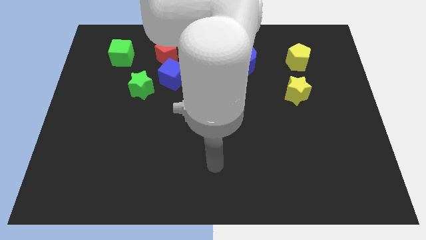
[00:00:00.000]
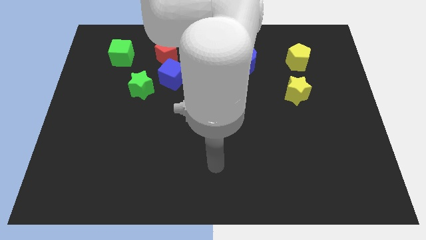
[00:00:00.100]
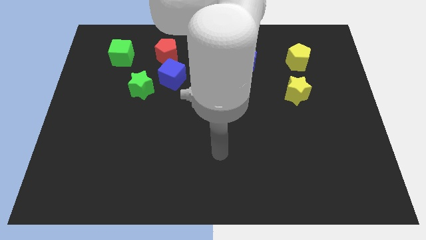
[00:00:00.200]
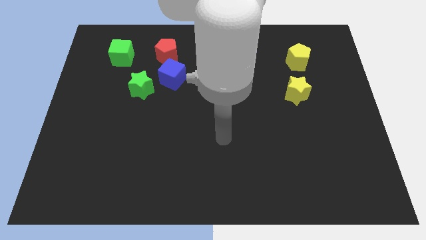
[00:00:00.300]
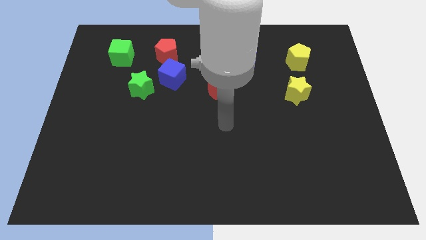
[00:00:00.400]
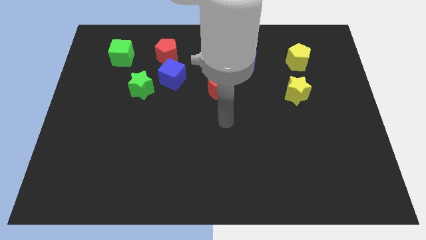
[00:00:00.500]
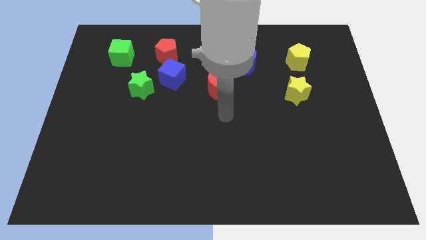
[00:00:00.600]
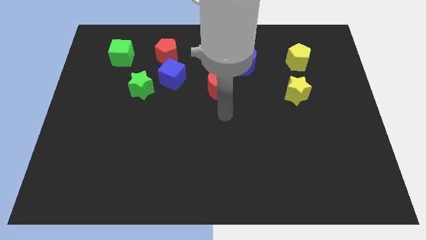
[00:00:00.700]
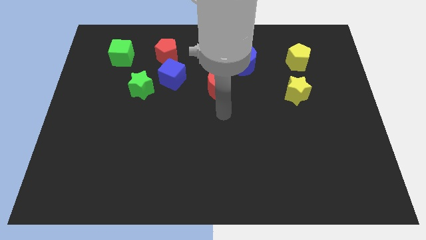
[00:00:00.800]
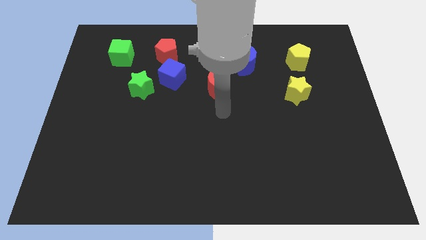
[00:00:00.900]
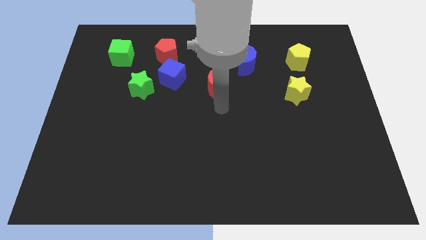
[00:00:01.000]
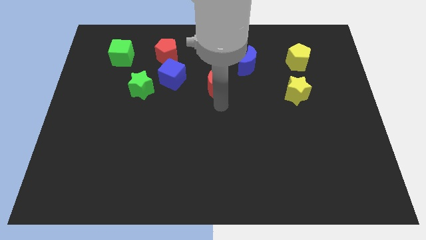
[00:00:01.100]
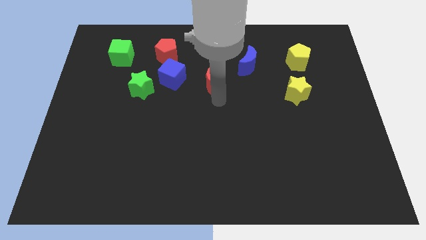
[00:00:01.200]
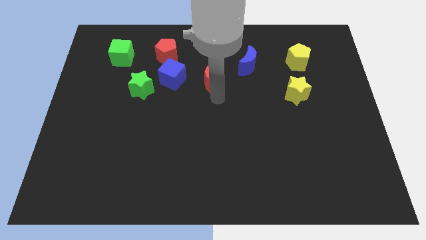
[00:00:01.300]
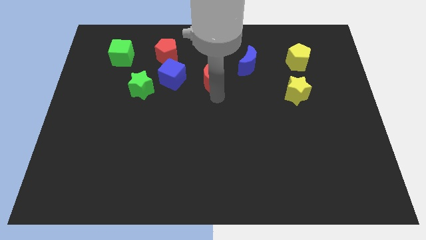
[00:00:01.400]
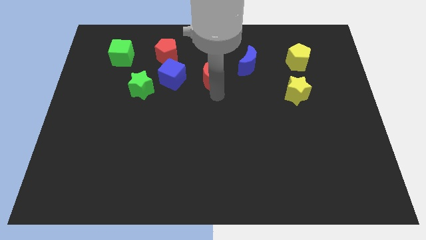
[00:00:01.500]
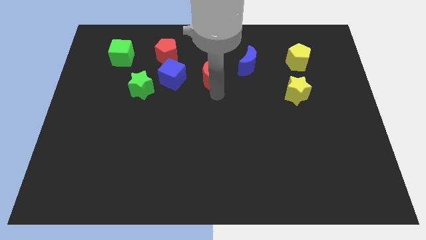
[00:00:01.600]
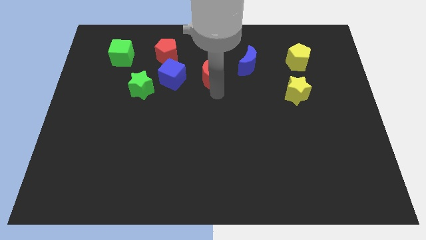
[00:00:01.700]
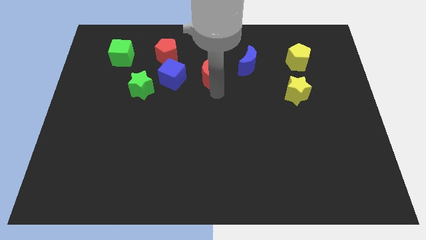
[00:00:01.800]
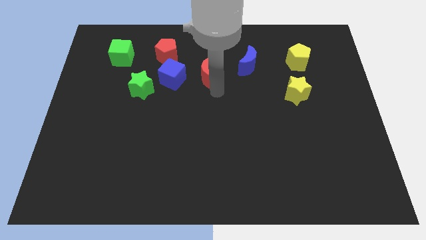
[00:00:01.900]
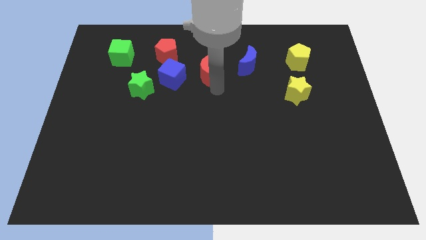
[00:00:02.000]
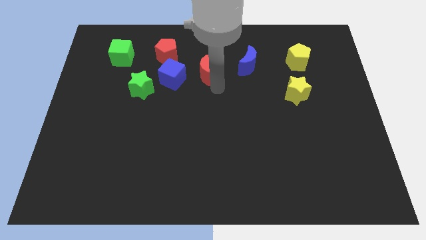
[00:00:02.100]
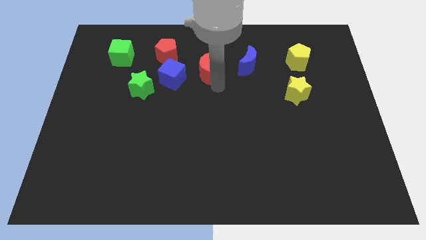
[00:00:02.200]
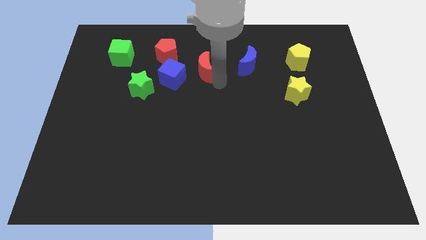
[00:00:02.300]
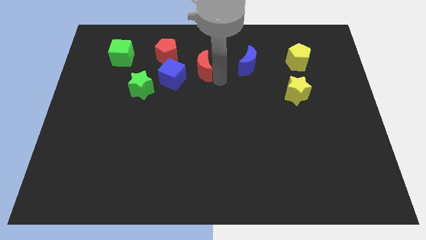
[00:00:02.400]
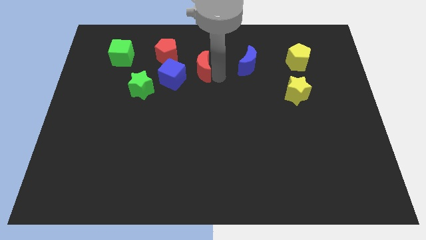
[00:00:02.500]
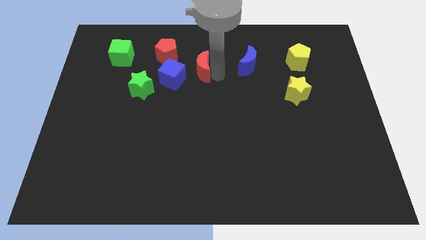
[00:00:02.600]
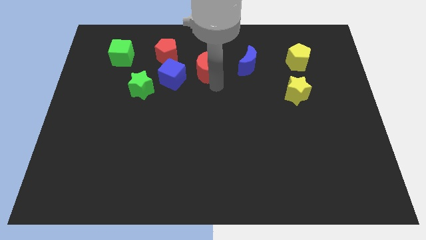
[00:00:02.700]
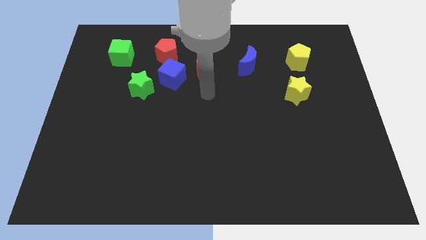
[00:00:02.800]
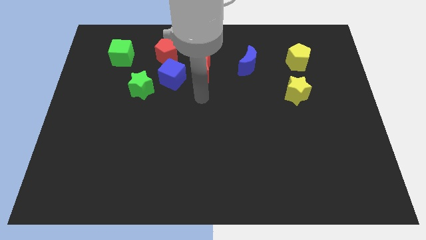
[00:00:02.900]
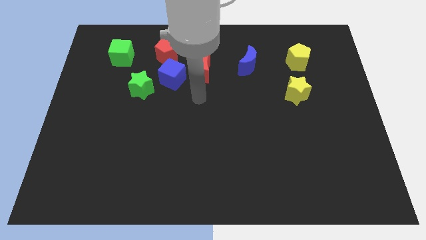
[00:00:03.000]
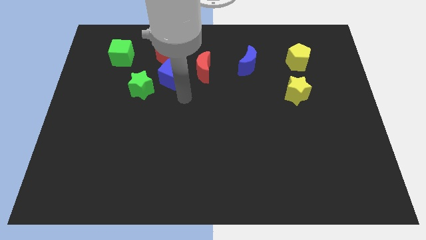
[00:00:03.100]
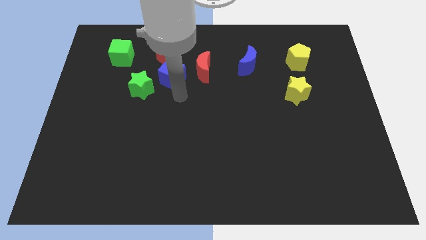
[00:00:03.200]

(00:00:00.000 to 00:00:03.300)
push the red half moon slightly towards the blue cube

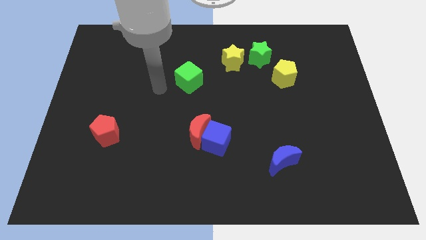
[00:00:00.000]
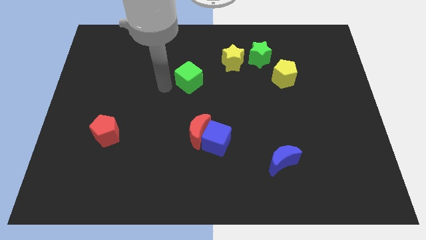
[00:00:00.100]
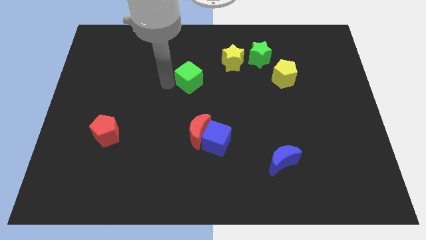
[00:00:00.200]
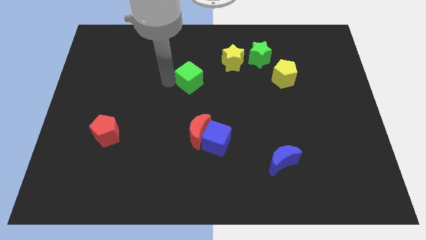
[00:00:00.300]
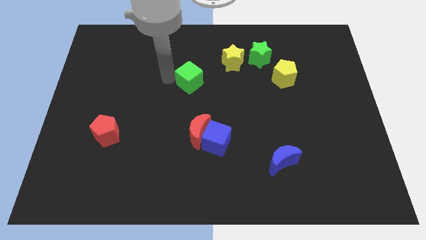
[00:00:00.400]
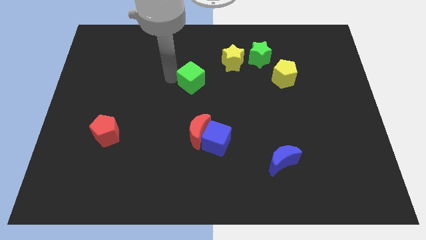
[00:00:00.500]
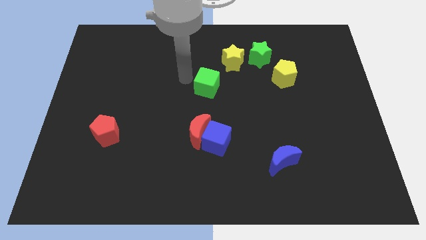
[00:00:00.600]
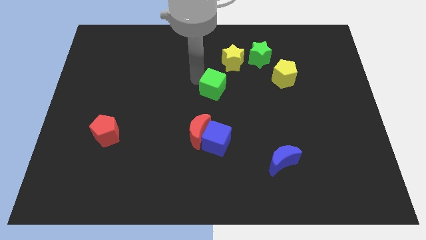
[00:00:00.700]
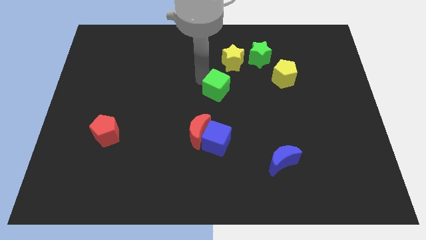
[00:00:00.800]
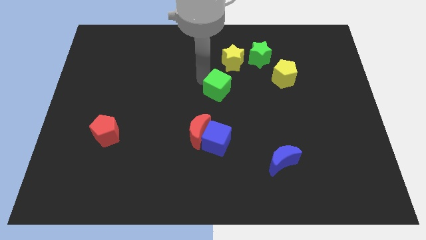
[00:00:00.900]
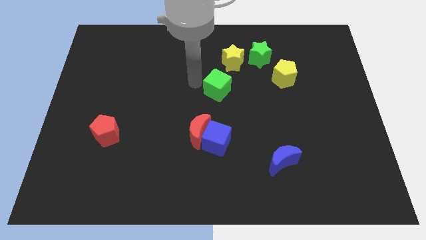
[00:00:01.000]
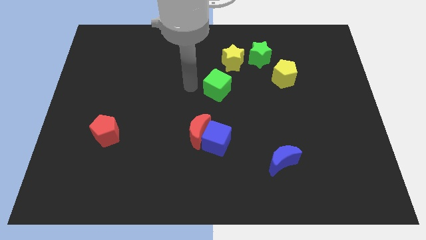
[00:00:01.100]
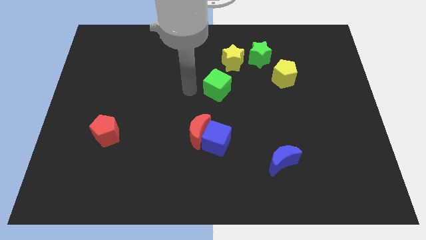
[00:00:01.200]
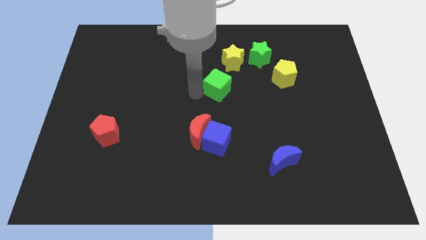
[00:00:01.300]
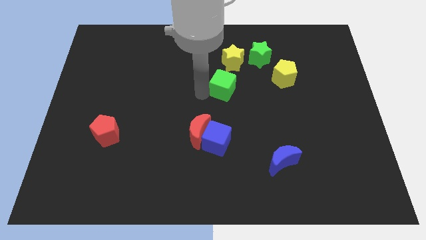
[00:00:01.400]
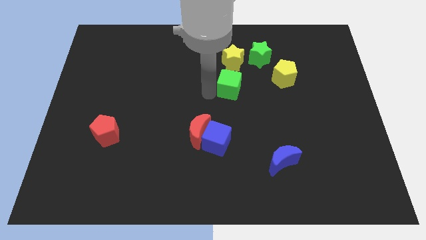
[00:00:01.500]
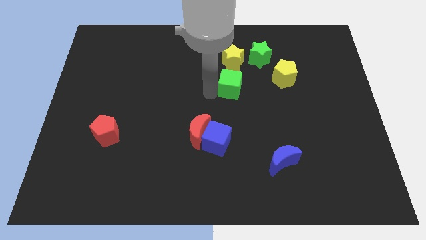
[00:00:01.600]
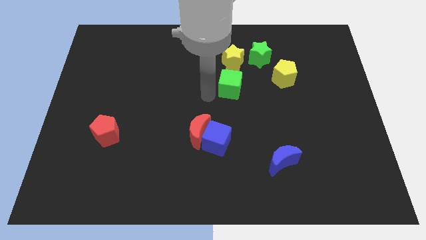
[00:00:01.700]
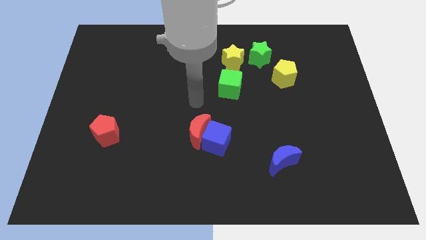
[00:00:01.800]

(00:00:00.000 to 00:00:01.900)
place the green cube below the yellow star

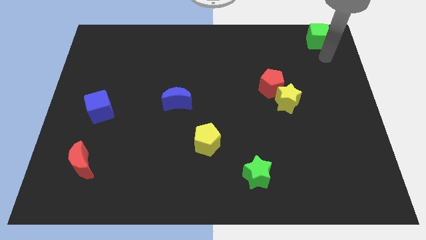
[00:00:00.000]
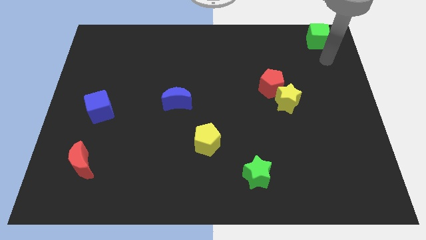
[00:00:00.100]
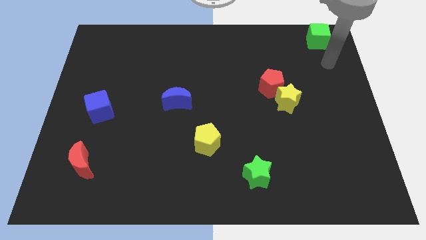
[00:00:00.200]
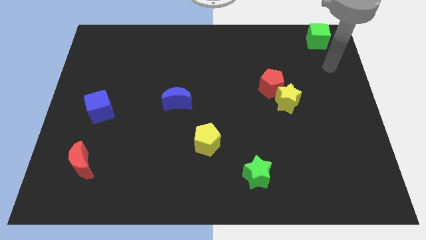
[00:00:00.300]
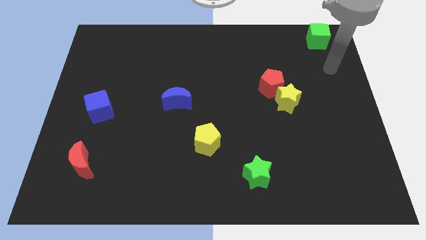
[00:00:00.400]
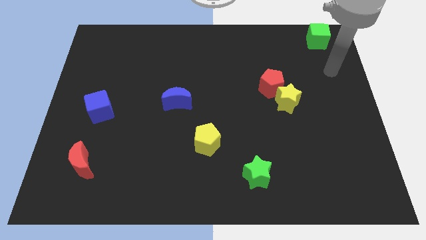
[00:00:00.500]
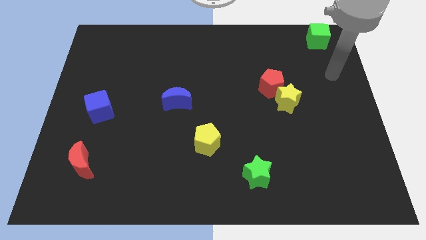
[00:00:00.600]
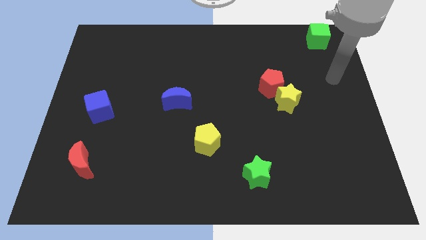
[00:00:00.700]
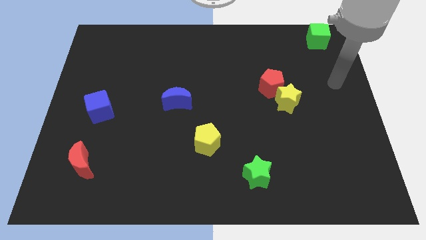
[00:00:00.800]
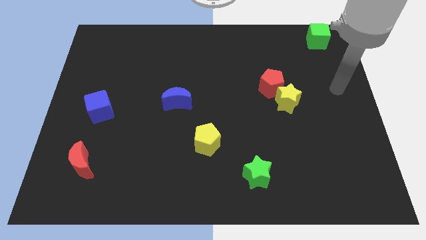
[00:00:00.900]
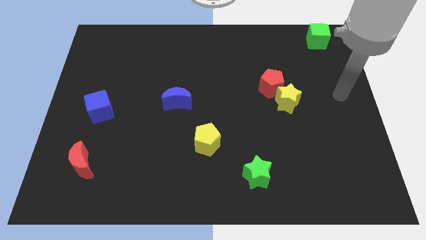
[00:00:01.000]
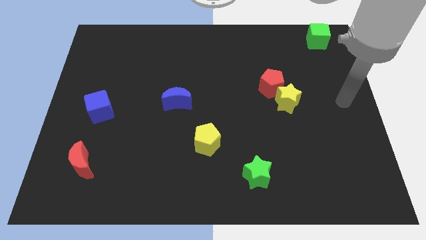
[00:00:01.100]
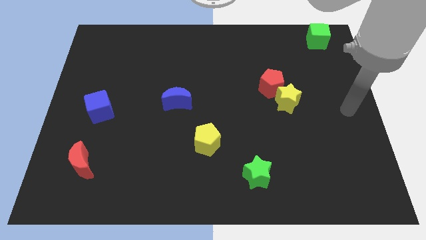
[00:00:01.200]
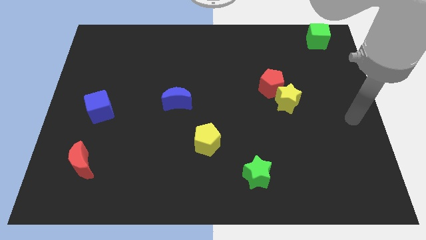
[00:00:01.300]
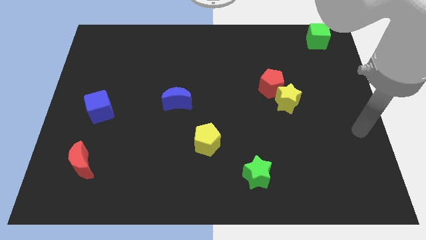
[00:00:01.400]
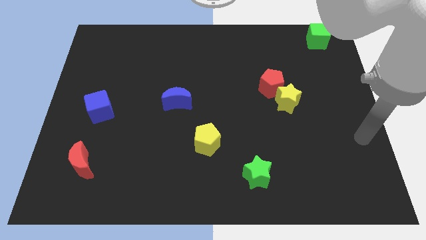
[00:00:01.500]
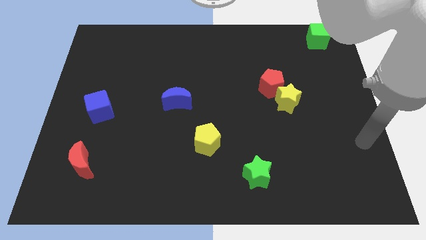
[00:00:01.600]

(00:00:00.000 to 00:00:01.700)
move the arm away from green cube

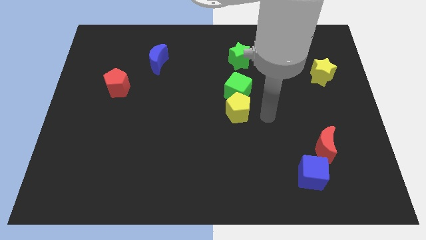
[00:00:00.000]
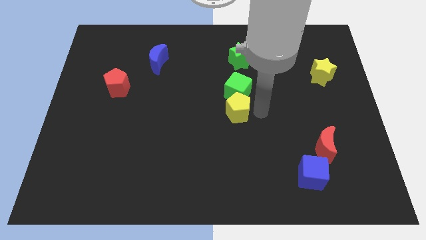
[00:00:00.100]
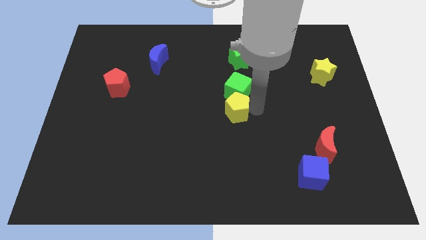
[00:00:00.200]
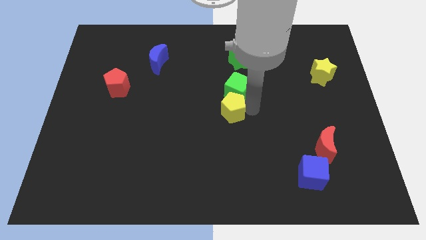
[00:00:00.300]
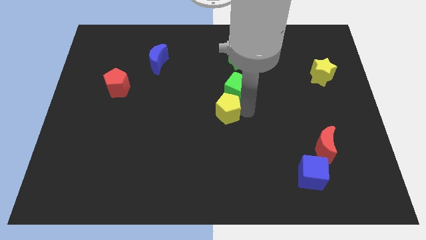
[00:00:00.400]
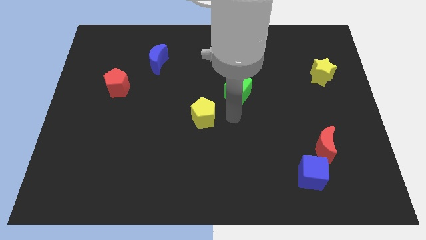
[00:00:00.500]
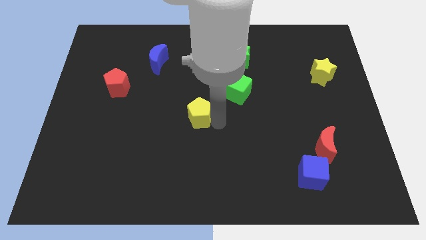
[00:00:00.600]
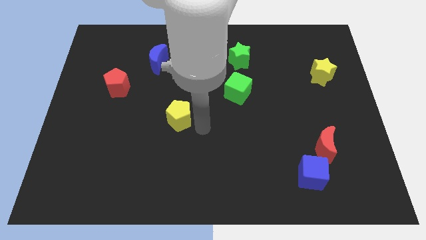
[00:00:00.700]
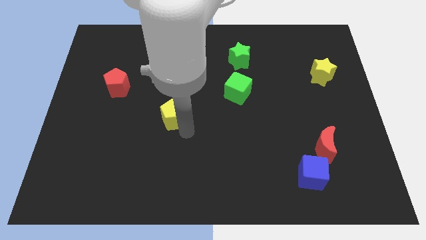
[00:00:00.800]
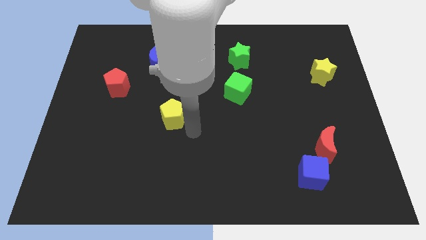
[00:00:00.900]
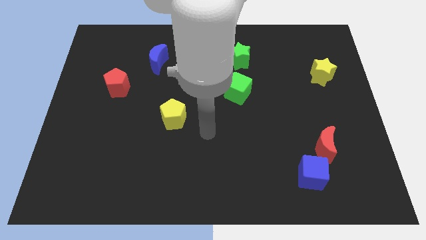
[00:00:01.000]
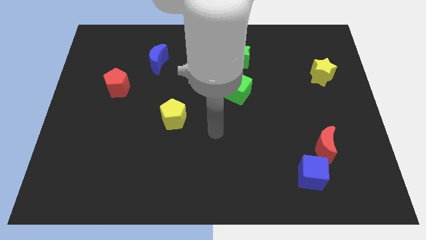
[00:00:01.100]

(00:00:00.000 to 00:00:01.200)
move the yellow pentagon away from the green cube

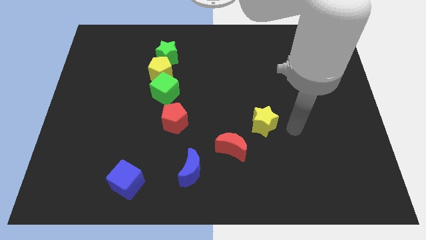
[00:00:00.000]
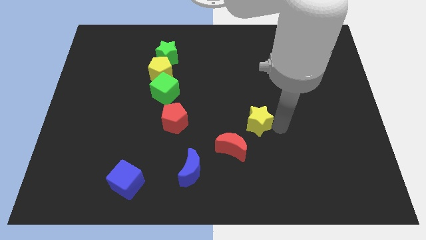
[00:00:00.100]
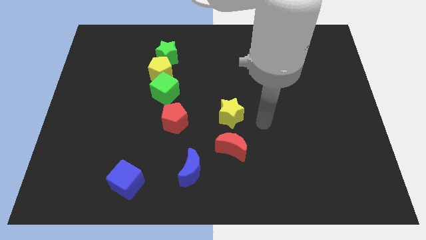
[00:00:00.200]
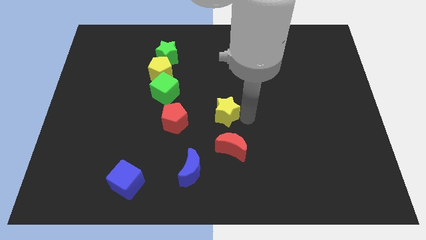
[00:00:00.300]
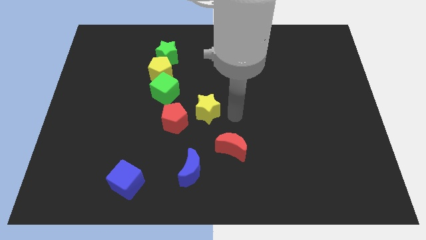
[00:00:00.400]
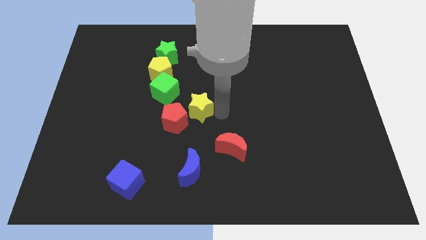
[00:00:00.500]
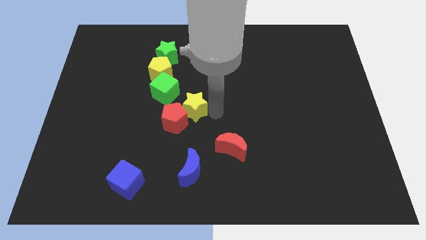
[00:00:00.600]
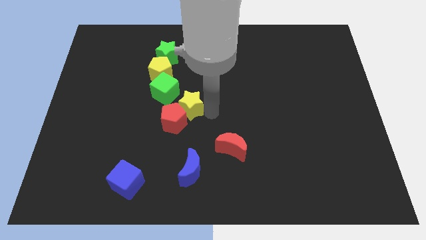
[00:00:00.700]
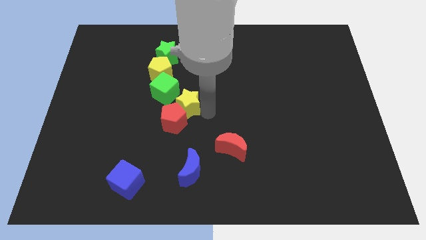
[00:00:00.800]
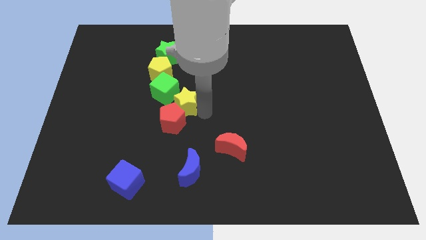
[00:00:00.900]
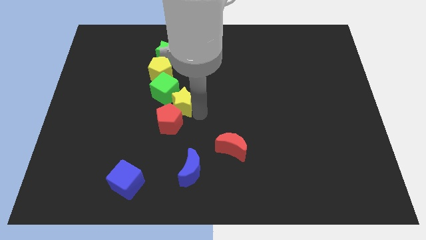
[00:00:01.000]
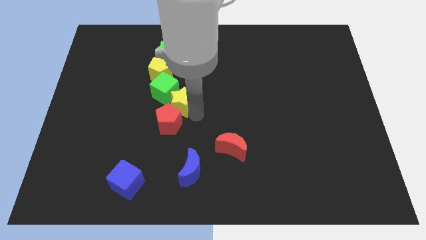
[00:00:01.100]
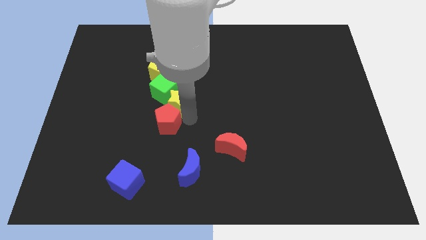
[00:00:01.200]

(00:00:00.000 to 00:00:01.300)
slide the yellow star into the red pentagon
